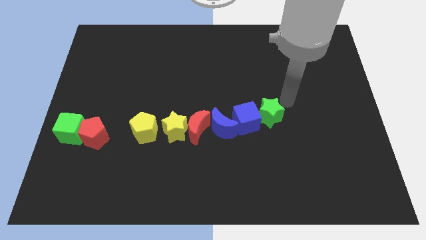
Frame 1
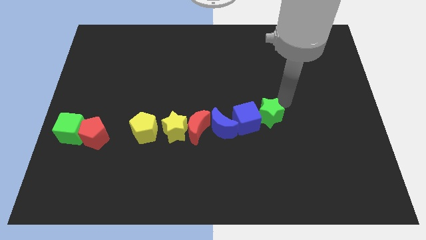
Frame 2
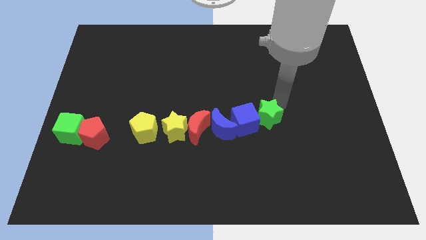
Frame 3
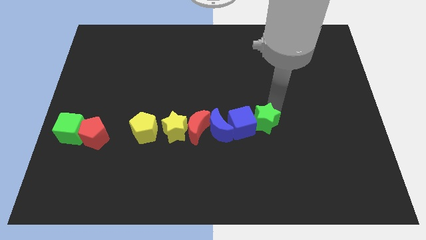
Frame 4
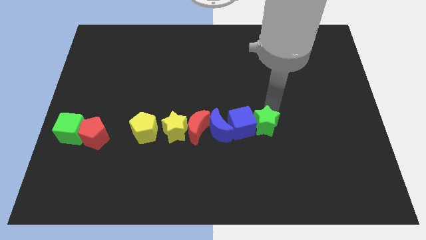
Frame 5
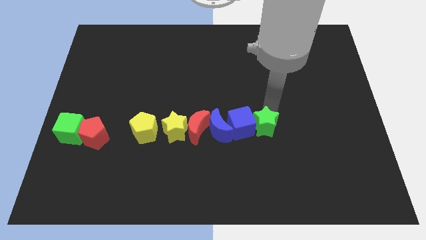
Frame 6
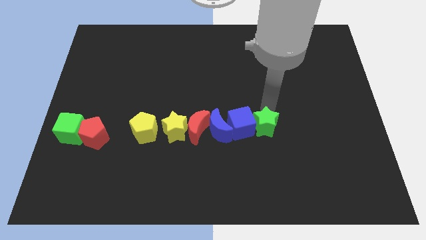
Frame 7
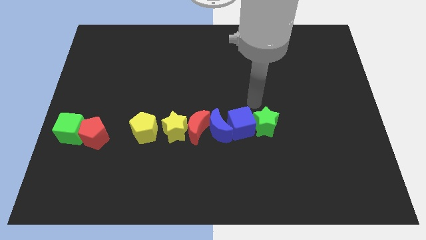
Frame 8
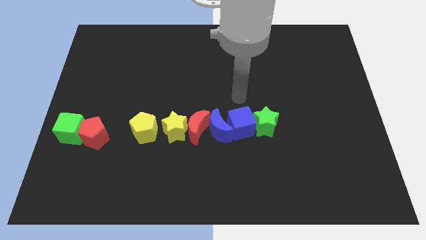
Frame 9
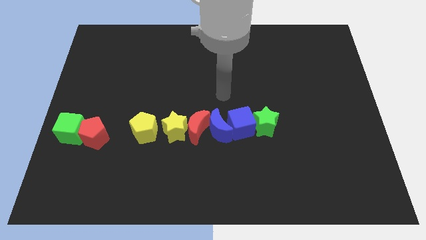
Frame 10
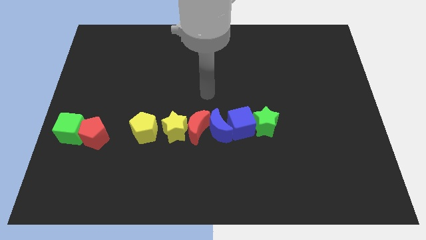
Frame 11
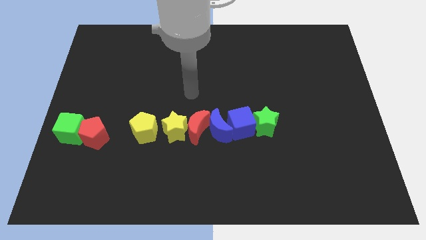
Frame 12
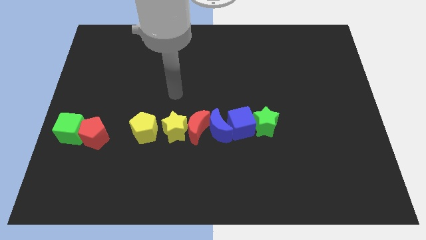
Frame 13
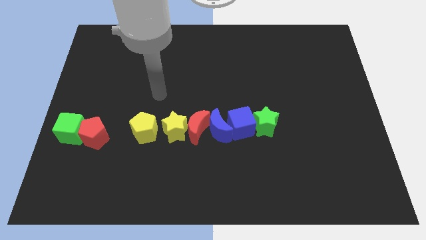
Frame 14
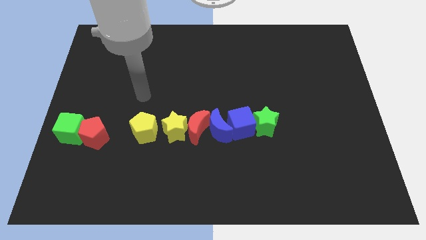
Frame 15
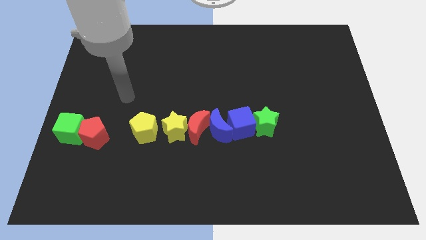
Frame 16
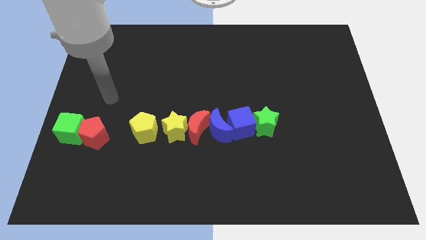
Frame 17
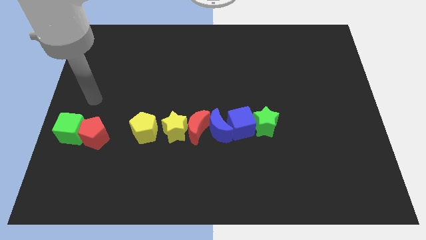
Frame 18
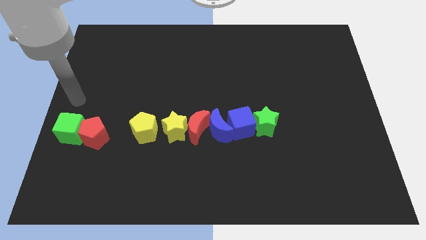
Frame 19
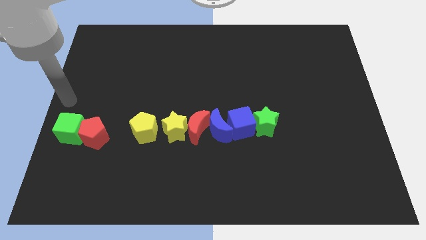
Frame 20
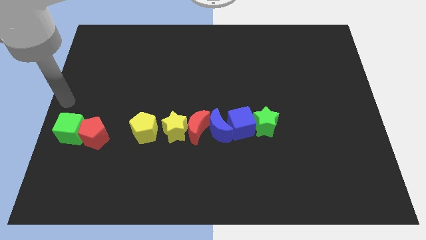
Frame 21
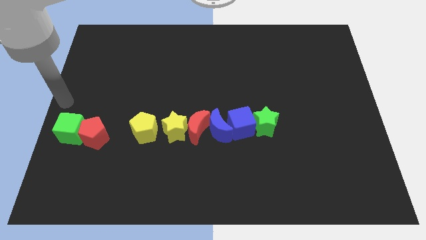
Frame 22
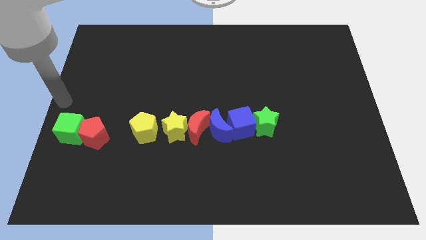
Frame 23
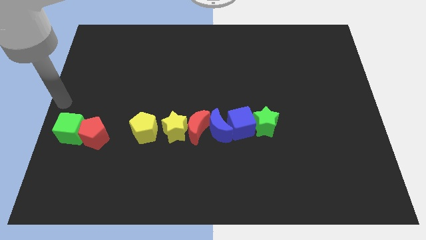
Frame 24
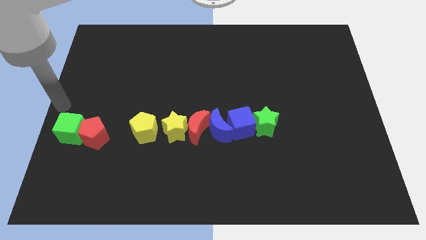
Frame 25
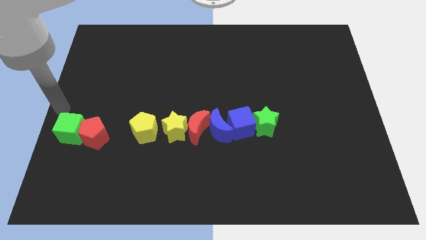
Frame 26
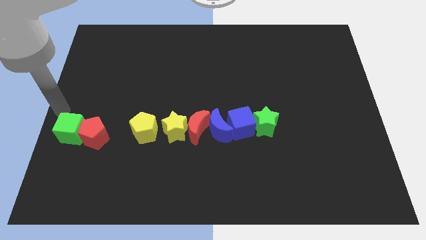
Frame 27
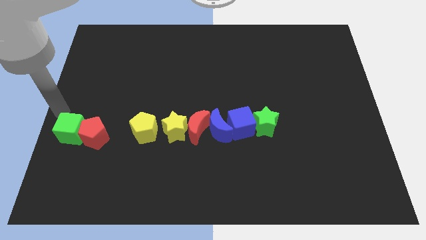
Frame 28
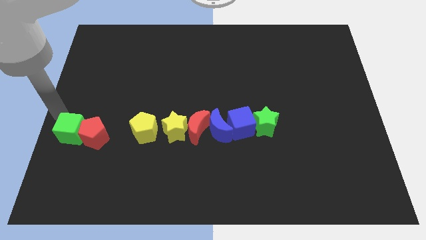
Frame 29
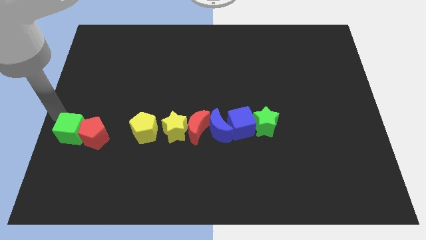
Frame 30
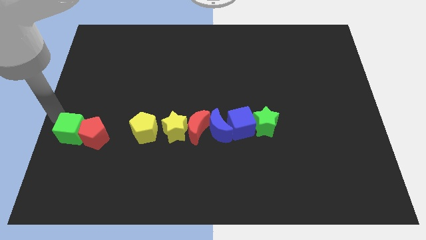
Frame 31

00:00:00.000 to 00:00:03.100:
move the arm towards the top left of the green cube

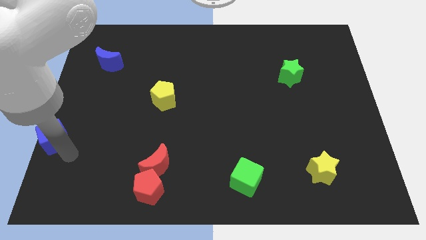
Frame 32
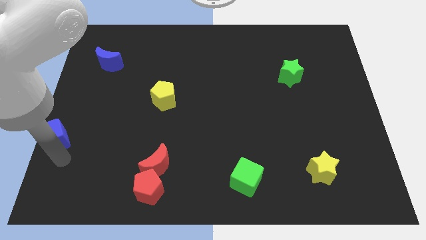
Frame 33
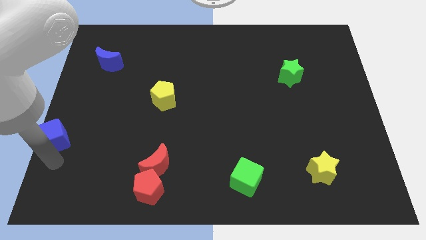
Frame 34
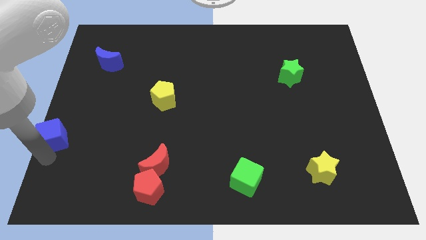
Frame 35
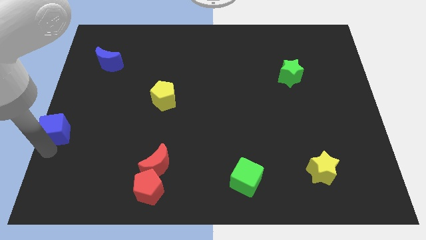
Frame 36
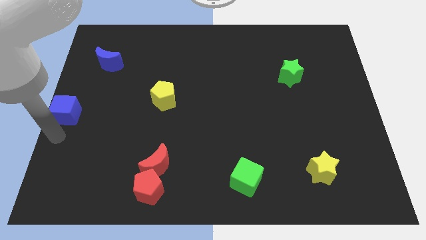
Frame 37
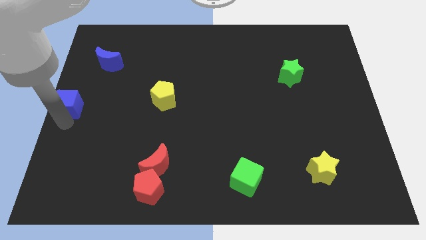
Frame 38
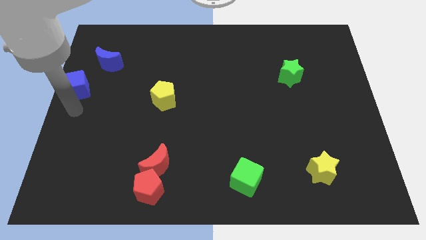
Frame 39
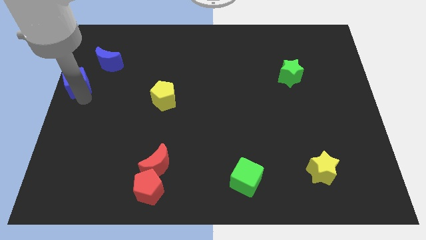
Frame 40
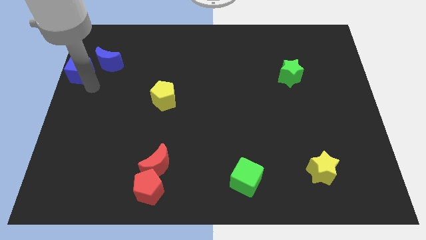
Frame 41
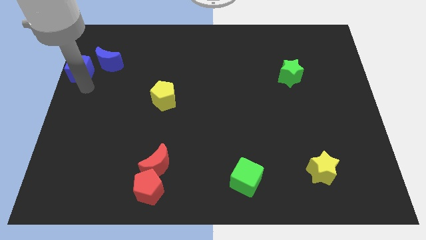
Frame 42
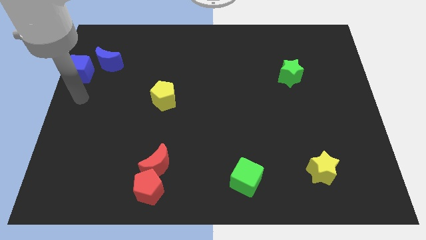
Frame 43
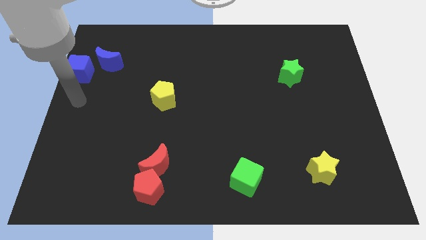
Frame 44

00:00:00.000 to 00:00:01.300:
place the blue cube close to the blue moon

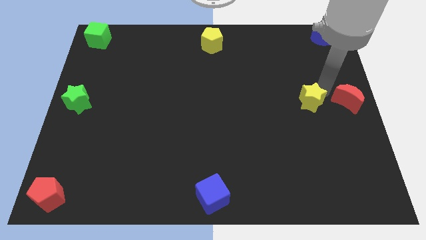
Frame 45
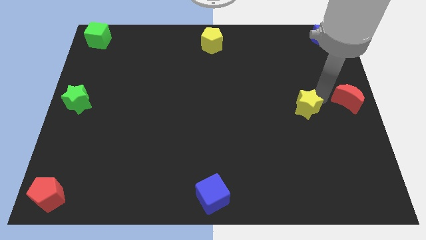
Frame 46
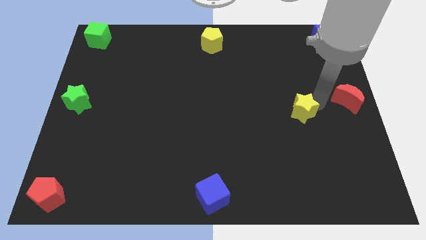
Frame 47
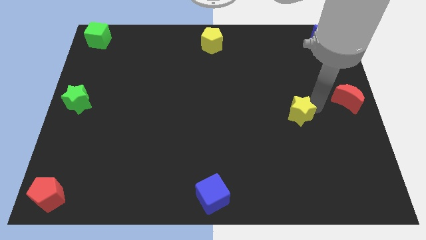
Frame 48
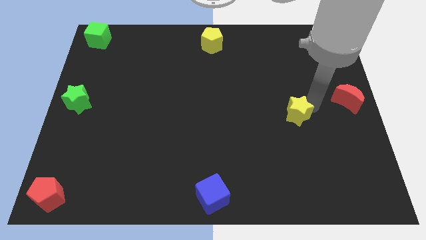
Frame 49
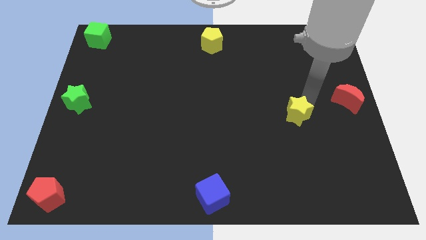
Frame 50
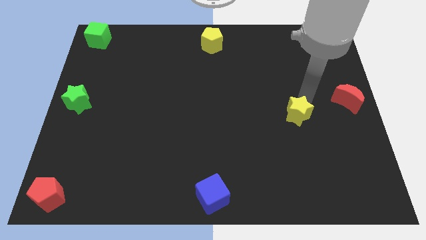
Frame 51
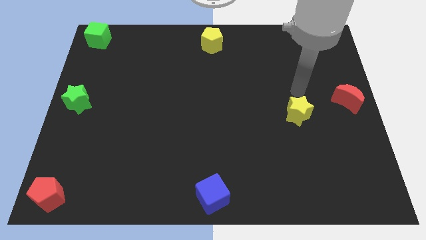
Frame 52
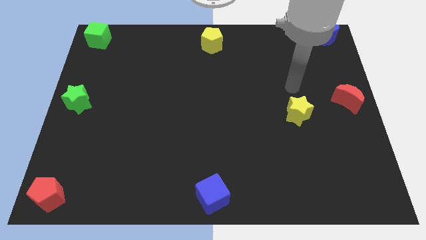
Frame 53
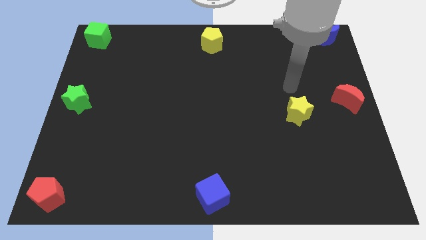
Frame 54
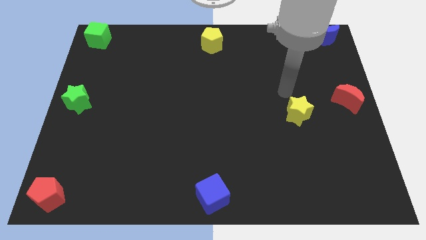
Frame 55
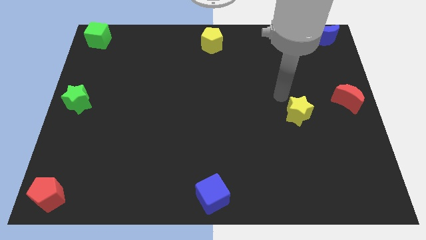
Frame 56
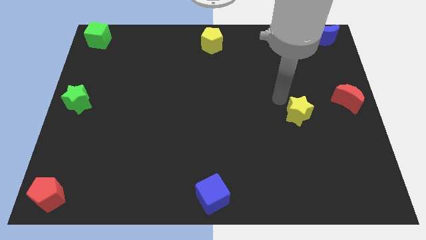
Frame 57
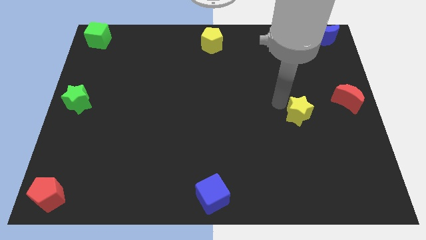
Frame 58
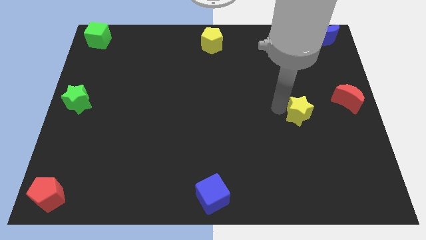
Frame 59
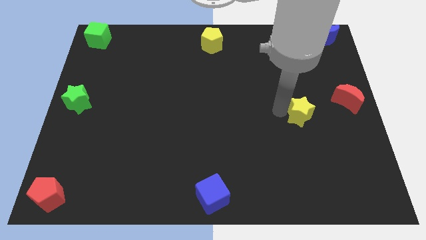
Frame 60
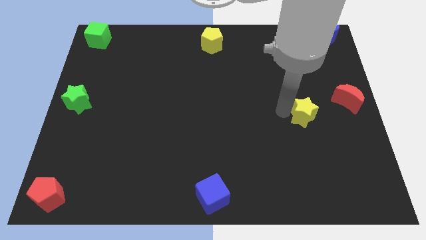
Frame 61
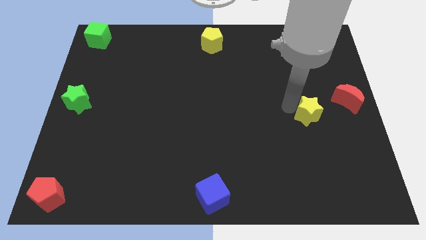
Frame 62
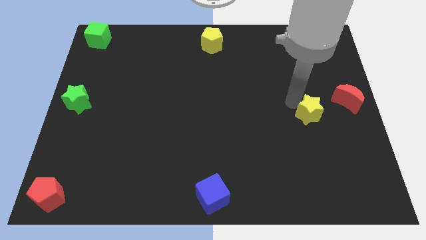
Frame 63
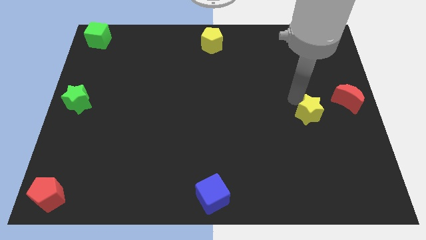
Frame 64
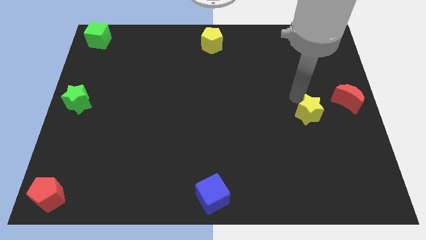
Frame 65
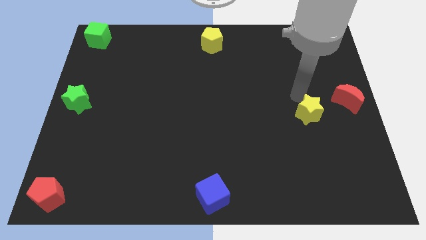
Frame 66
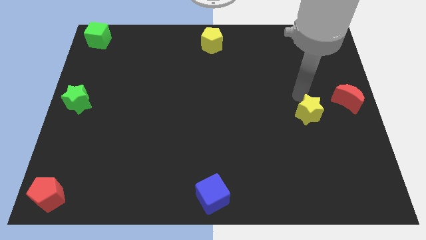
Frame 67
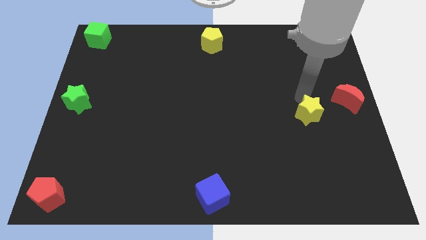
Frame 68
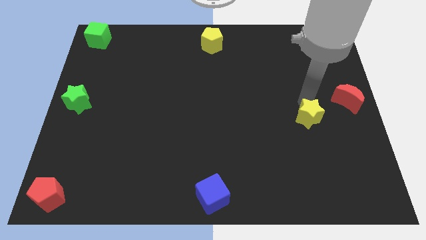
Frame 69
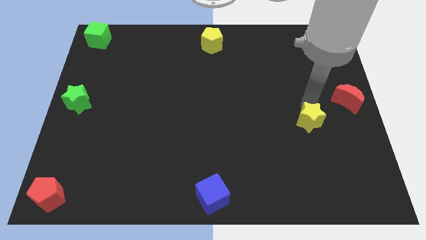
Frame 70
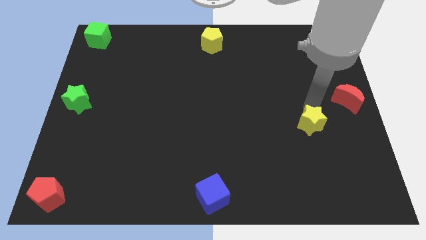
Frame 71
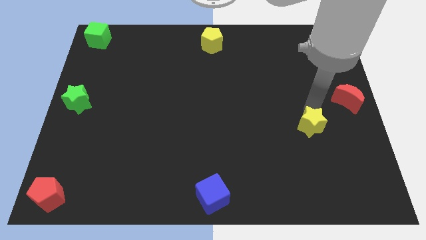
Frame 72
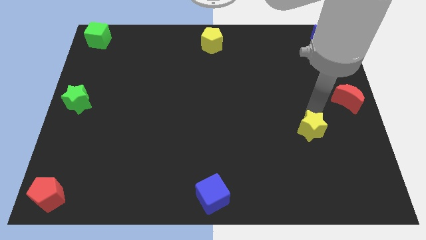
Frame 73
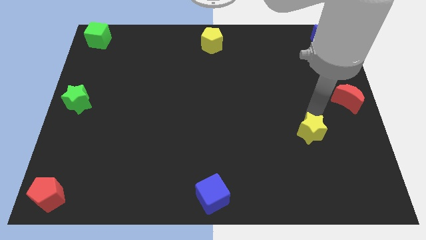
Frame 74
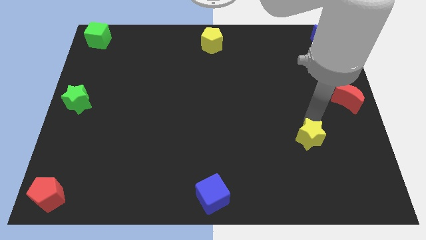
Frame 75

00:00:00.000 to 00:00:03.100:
separate the yellow star from the red pentagon

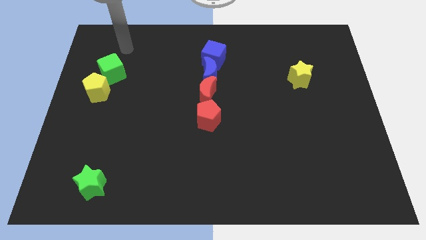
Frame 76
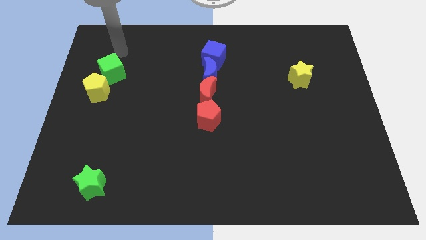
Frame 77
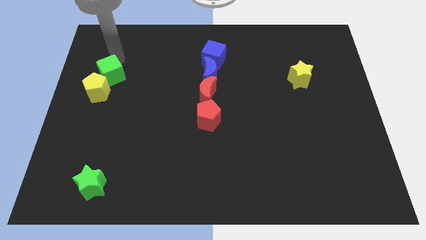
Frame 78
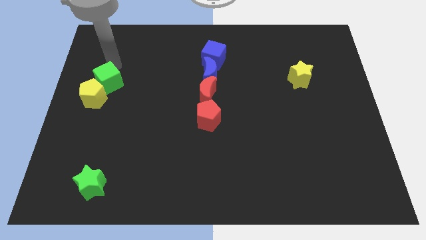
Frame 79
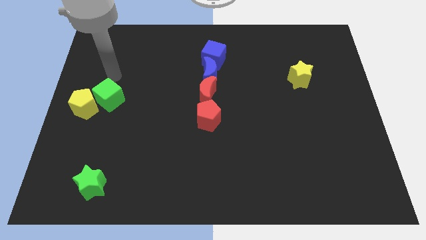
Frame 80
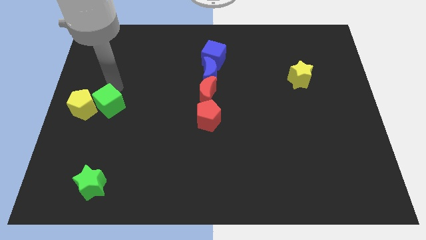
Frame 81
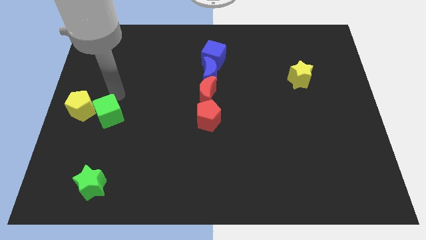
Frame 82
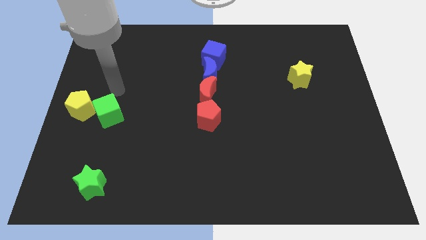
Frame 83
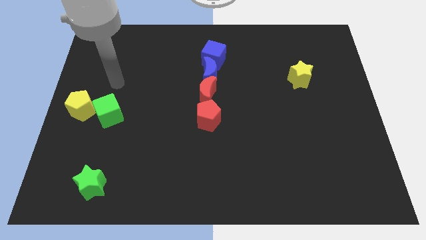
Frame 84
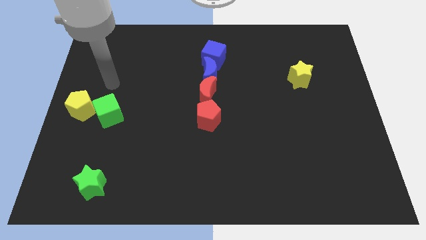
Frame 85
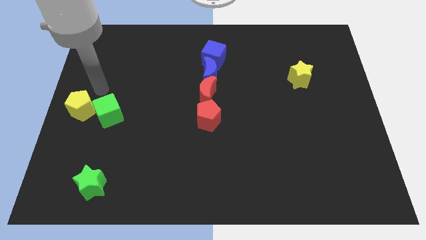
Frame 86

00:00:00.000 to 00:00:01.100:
push the green cube slightly towards down

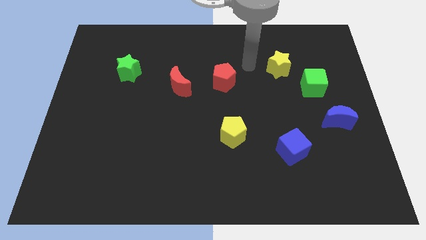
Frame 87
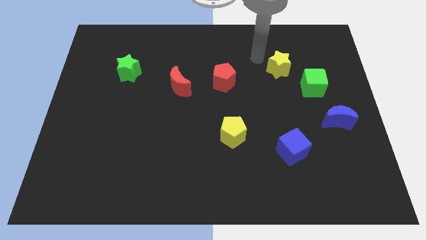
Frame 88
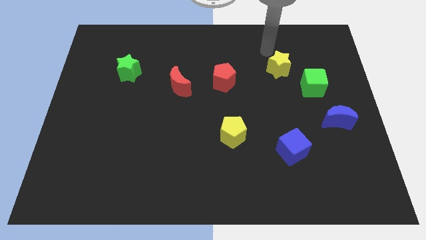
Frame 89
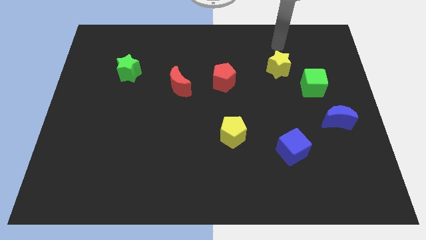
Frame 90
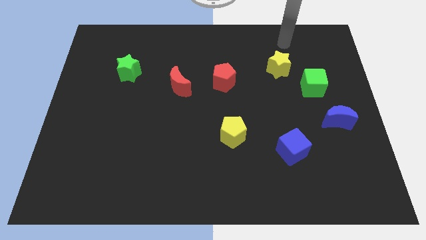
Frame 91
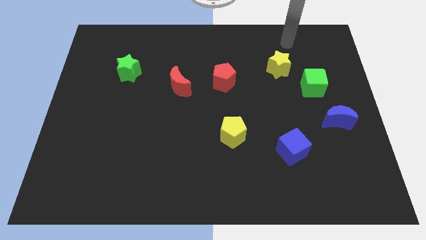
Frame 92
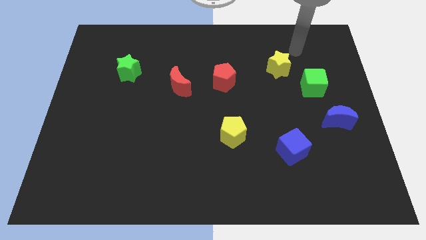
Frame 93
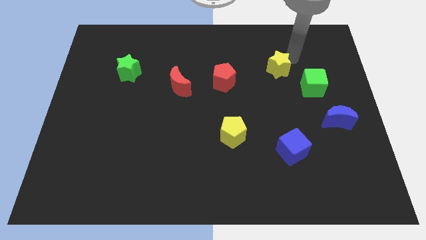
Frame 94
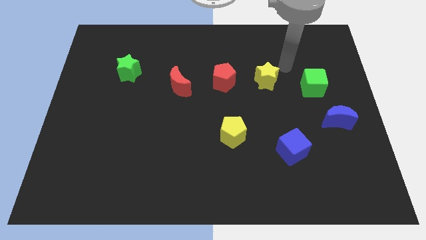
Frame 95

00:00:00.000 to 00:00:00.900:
move the yellow star in between the red pentagon and the green cube
